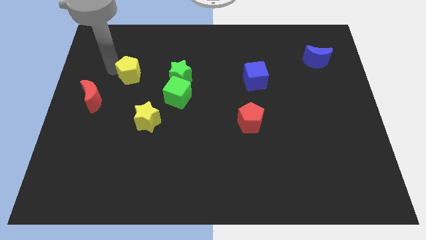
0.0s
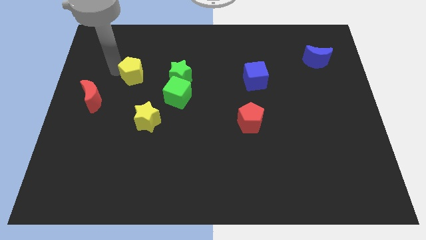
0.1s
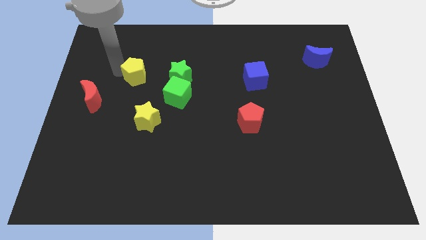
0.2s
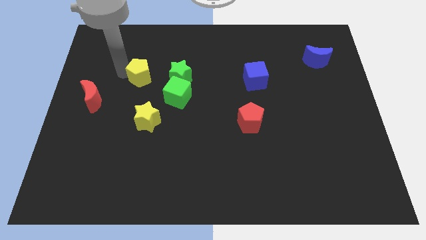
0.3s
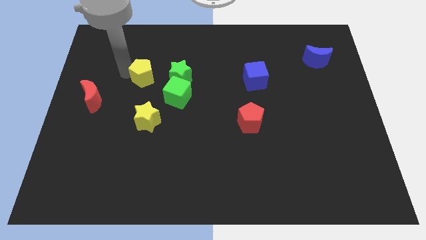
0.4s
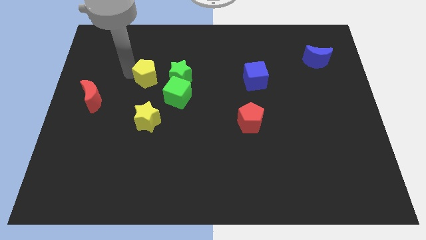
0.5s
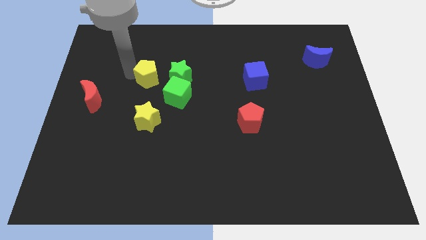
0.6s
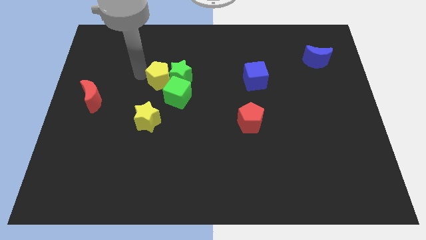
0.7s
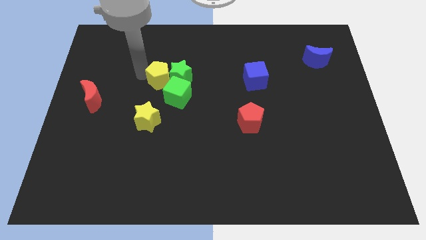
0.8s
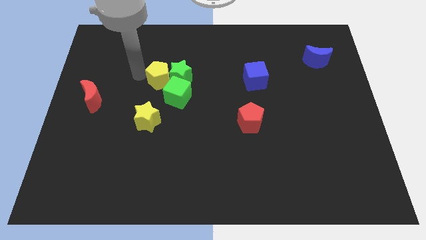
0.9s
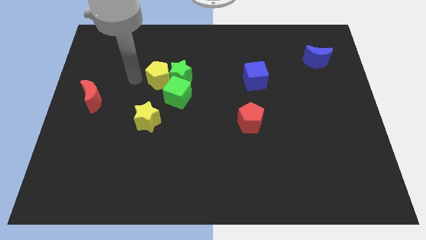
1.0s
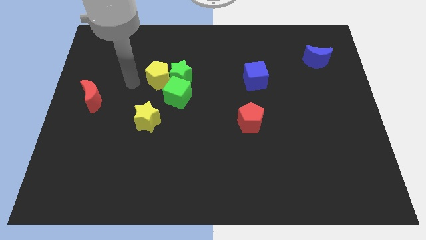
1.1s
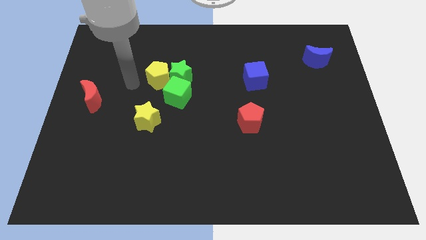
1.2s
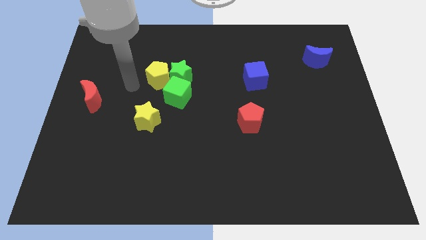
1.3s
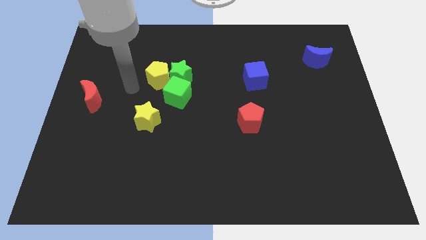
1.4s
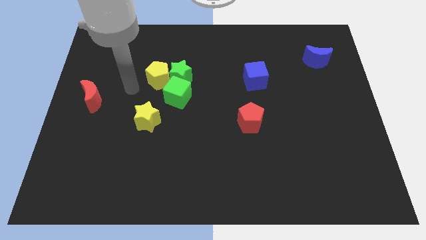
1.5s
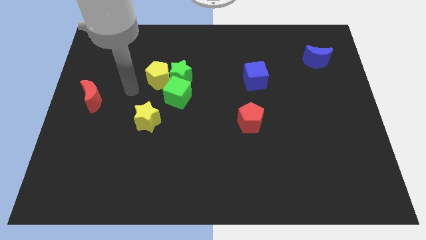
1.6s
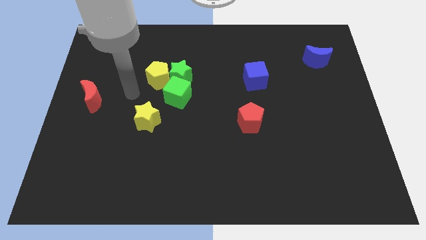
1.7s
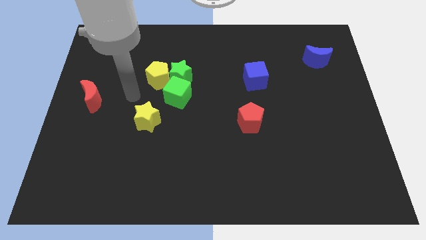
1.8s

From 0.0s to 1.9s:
push the yellow pentagon to the group of object

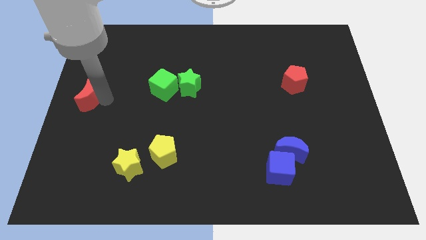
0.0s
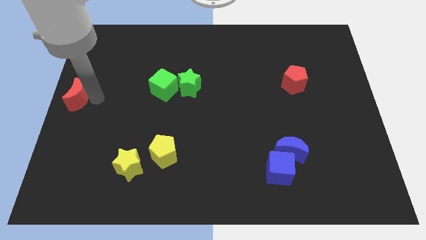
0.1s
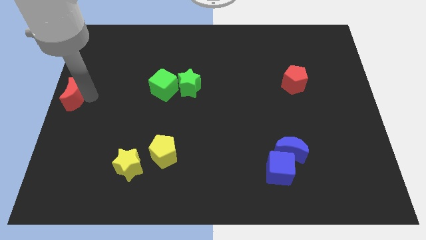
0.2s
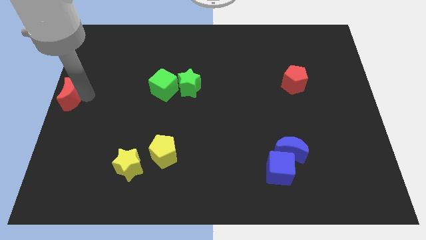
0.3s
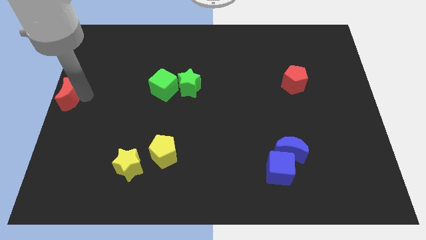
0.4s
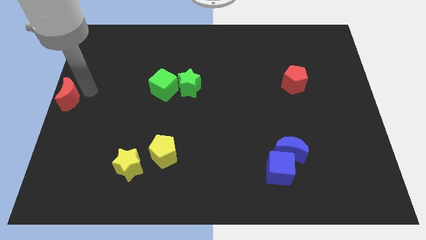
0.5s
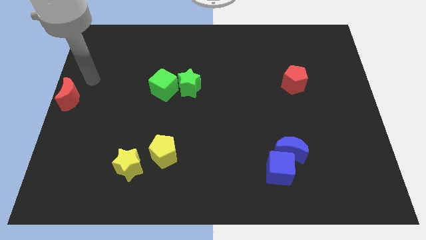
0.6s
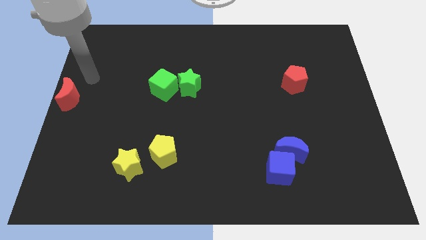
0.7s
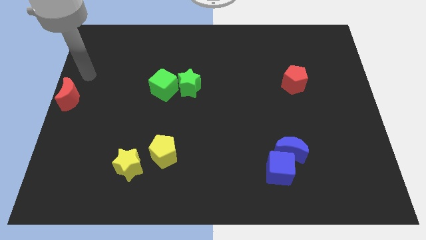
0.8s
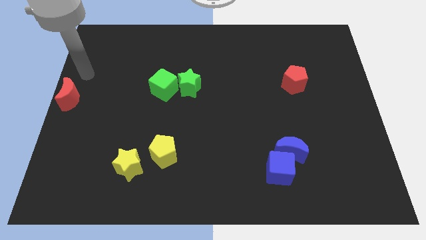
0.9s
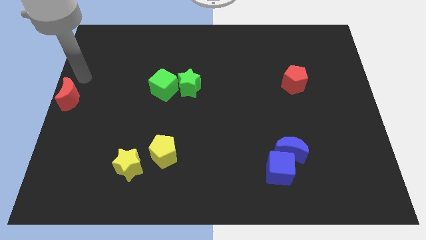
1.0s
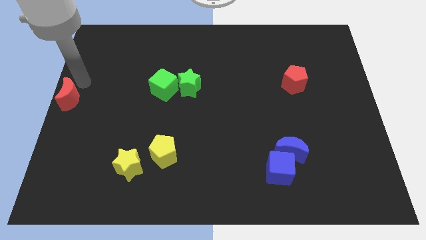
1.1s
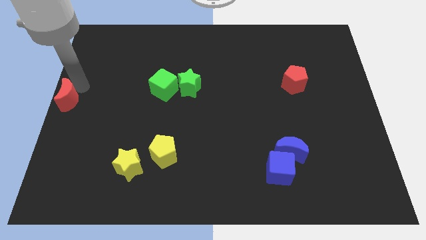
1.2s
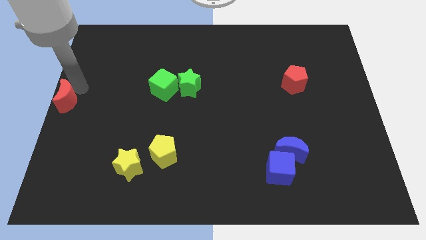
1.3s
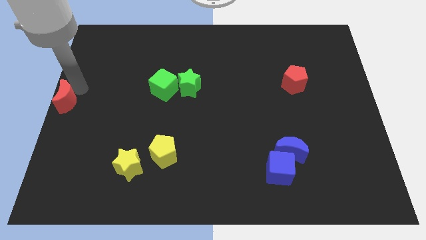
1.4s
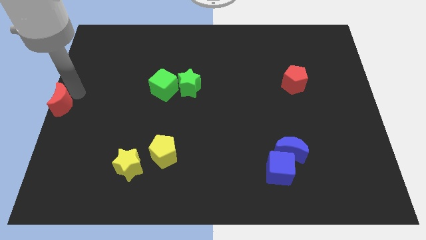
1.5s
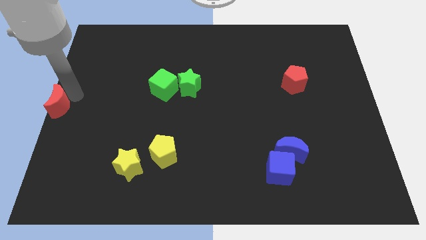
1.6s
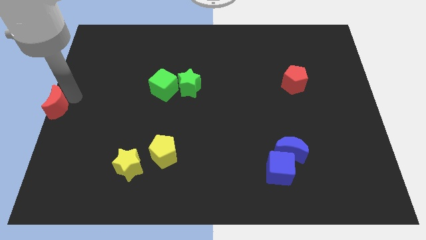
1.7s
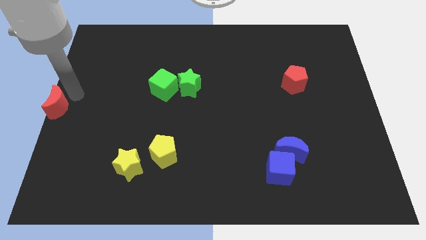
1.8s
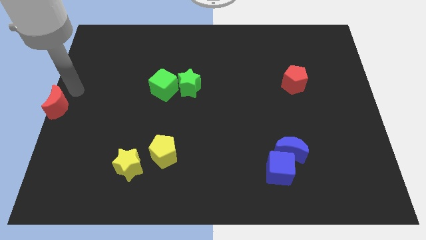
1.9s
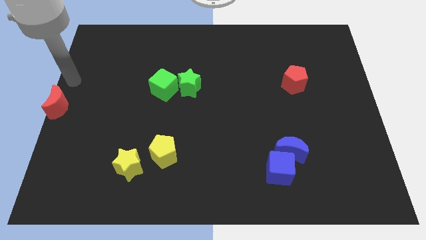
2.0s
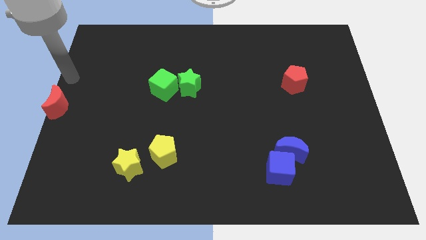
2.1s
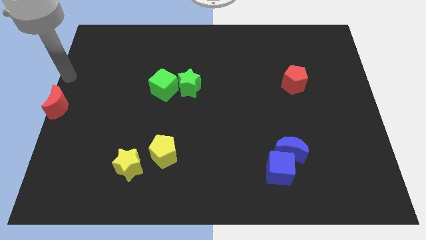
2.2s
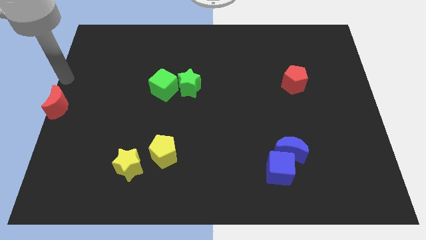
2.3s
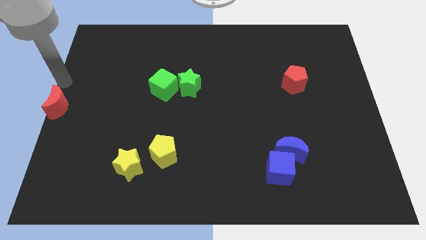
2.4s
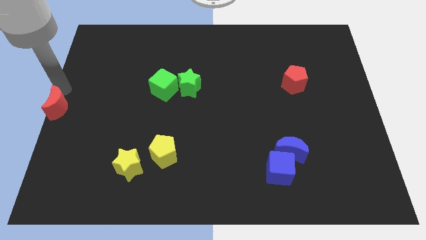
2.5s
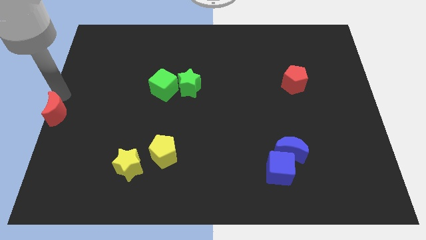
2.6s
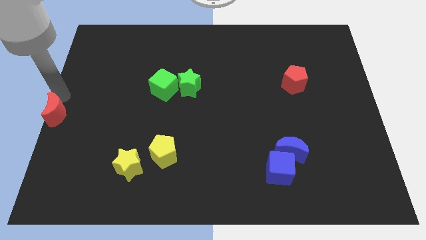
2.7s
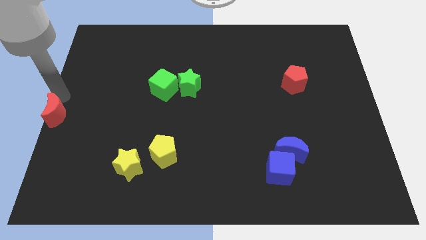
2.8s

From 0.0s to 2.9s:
place the red moon at the center left of the board

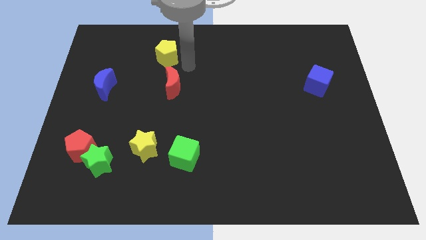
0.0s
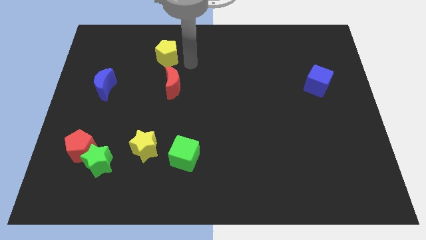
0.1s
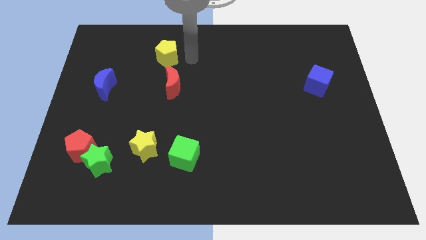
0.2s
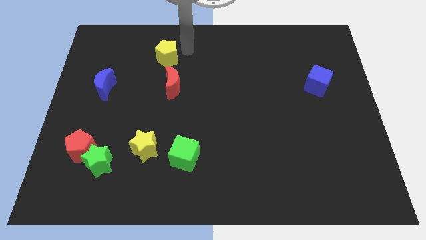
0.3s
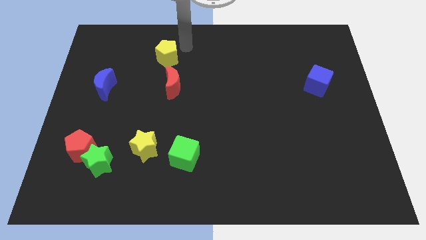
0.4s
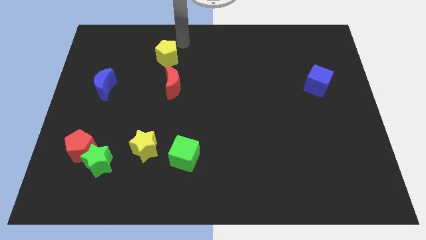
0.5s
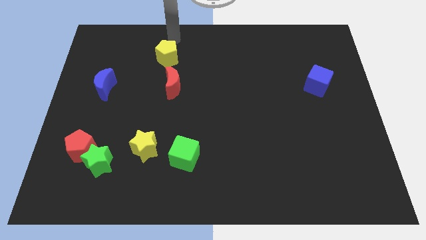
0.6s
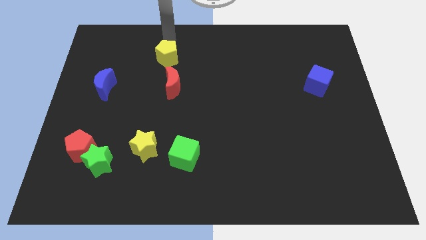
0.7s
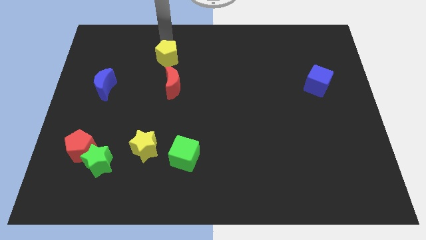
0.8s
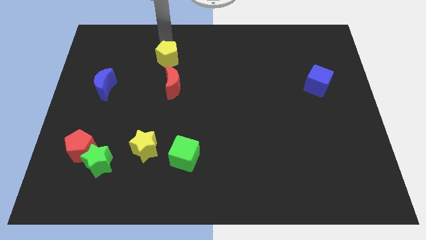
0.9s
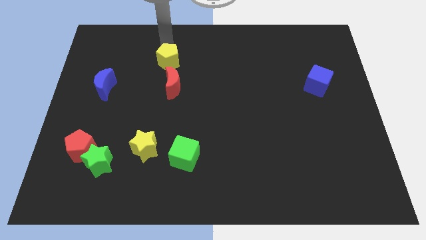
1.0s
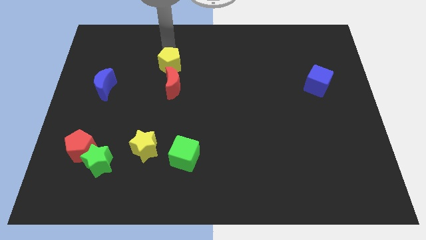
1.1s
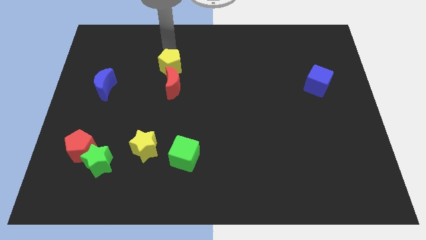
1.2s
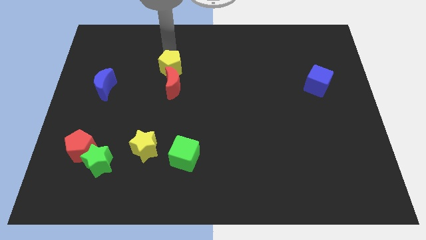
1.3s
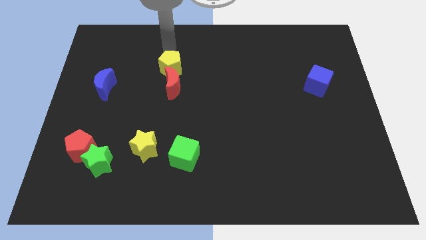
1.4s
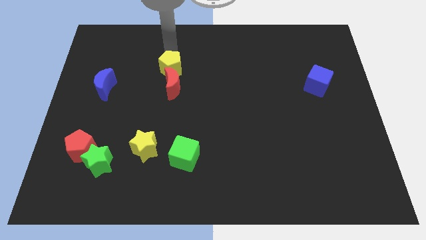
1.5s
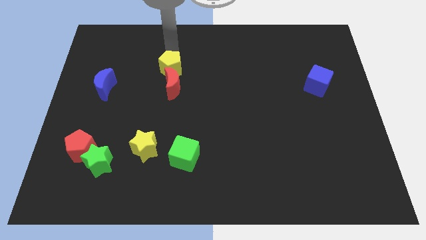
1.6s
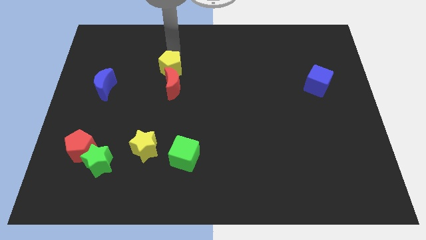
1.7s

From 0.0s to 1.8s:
push yellow pentagon into the red moon

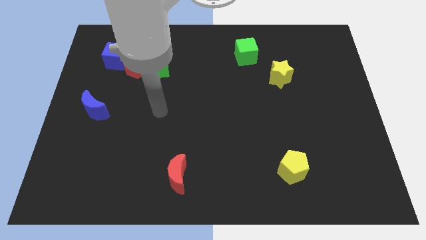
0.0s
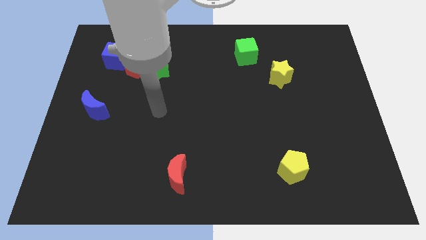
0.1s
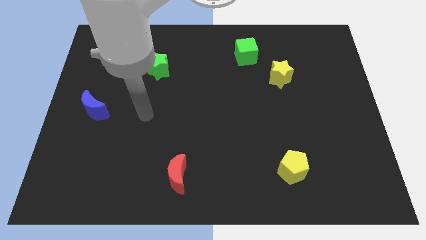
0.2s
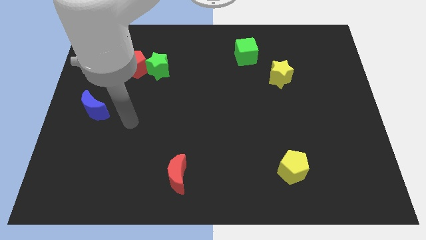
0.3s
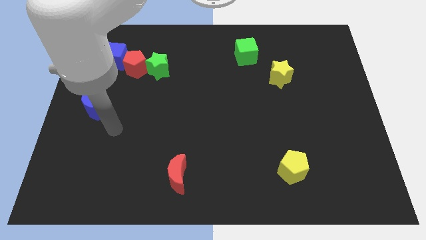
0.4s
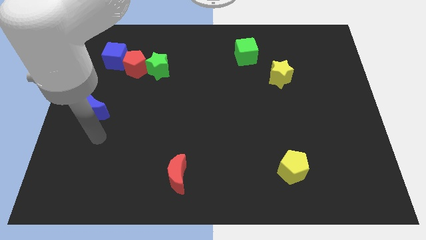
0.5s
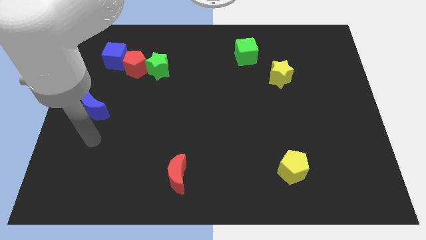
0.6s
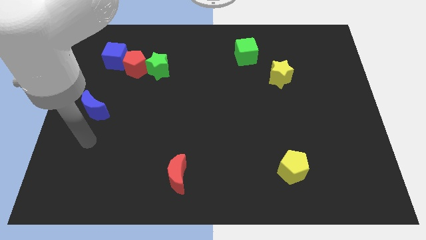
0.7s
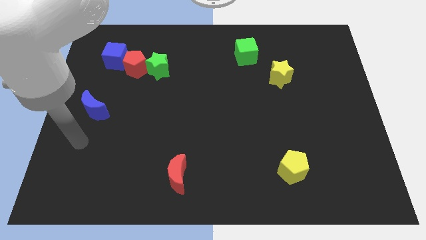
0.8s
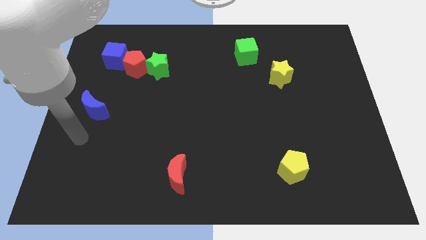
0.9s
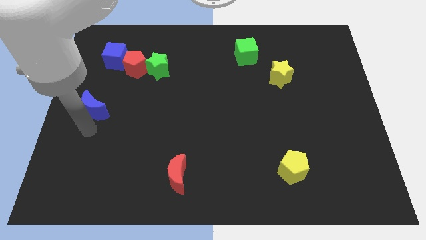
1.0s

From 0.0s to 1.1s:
move your arm towards the blue moon

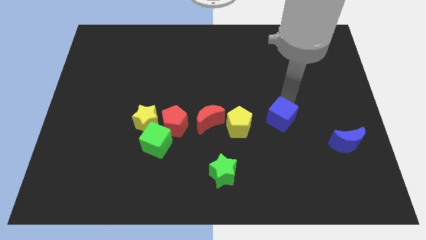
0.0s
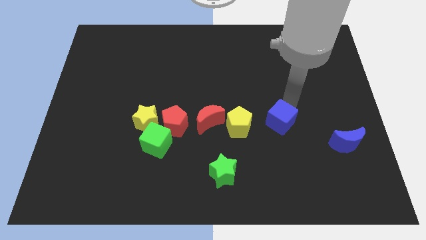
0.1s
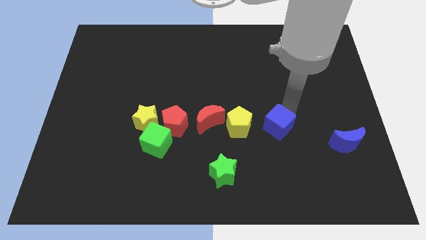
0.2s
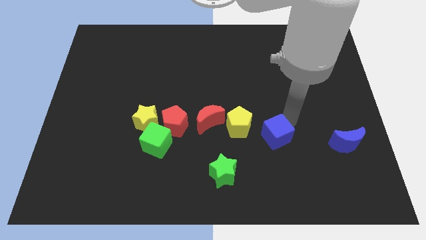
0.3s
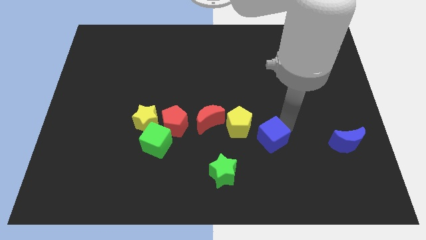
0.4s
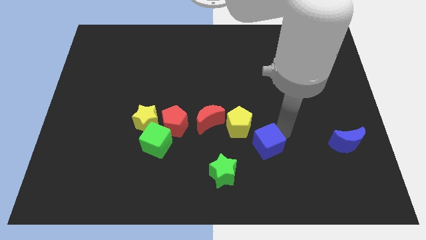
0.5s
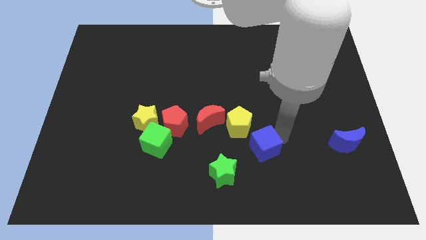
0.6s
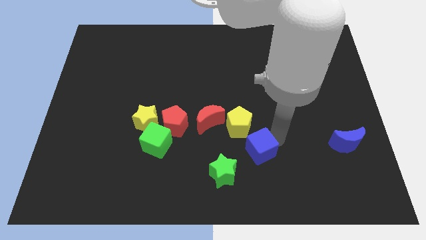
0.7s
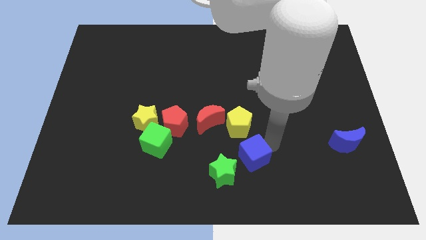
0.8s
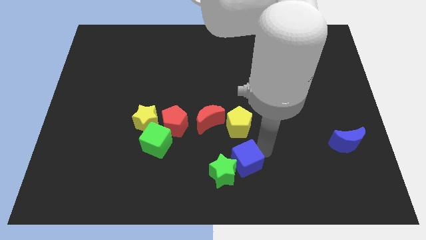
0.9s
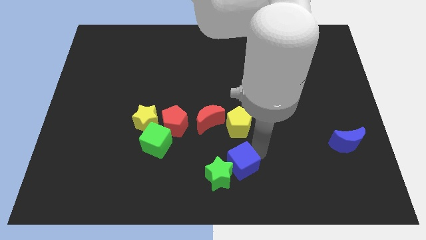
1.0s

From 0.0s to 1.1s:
place the blue cube below the yellow pentagon

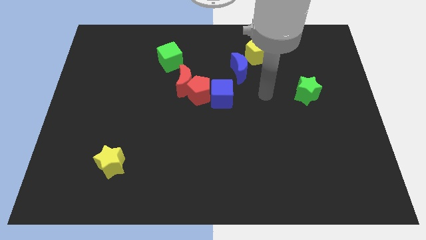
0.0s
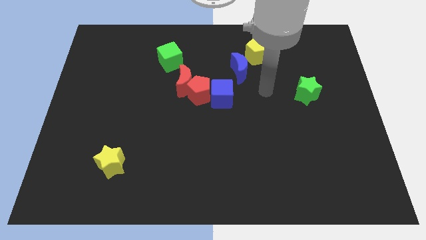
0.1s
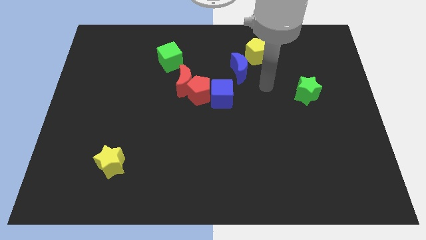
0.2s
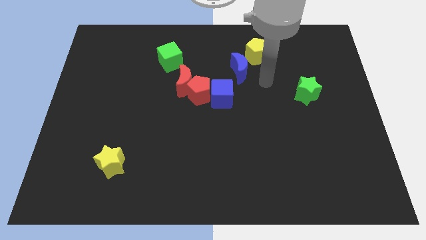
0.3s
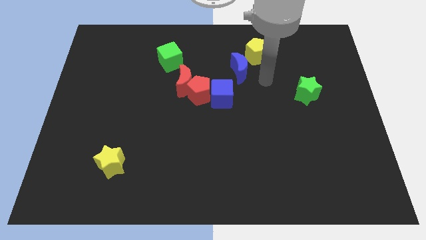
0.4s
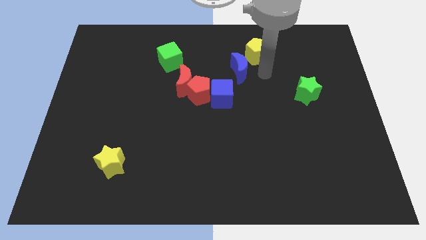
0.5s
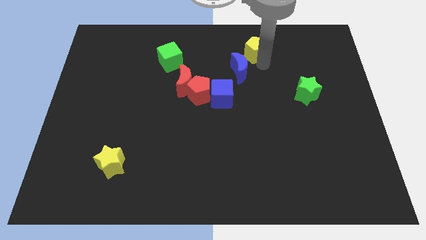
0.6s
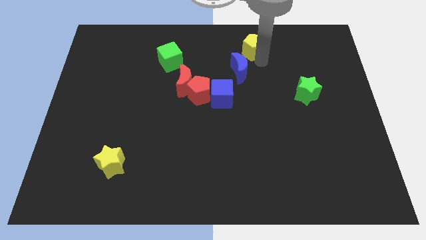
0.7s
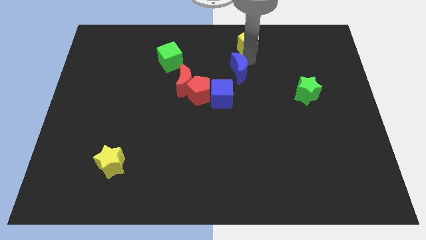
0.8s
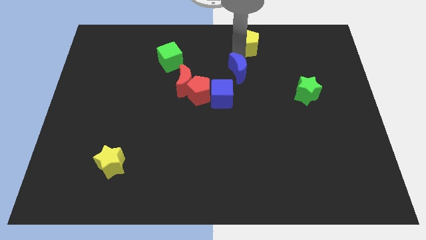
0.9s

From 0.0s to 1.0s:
push yellow pentagon slightly upwards
